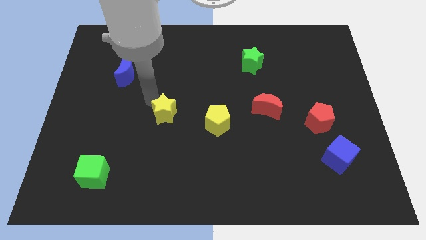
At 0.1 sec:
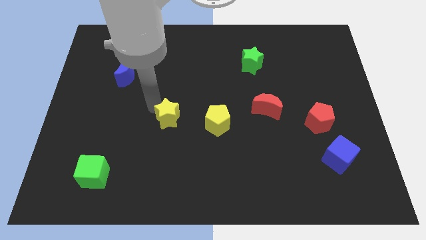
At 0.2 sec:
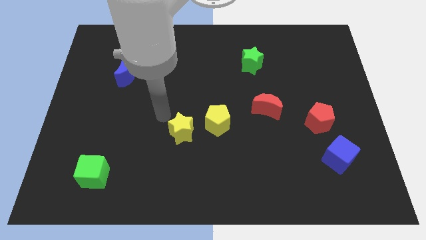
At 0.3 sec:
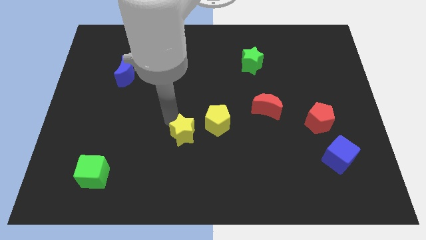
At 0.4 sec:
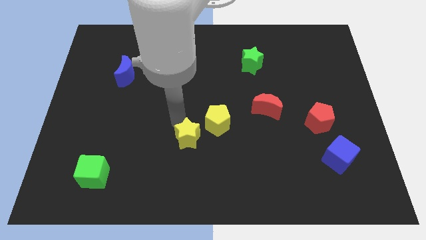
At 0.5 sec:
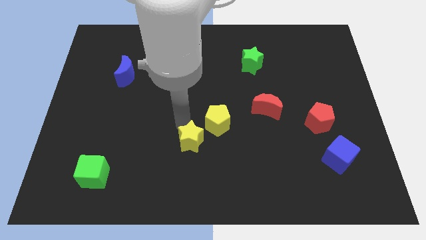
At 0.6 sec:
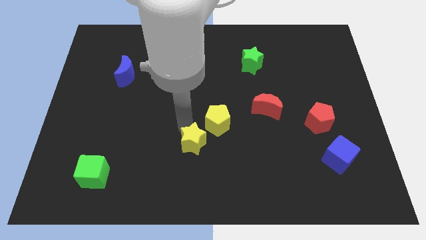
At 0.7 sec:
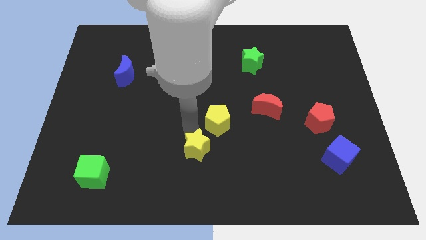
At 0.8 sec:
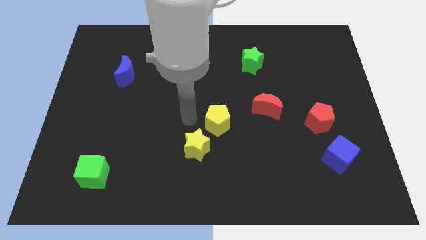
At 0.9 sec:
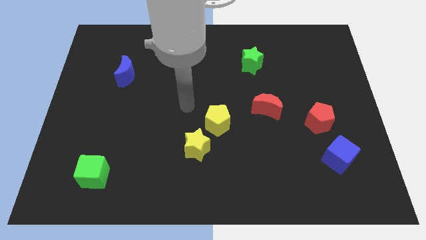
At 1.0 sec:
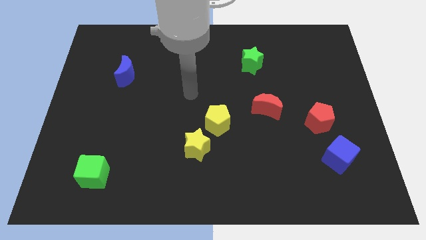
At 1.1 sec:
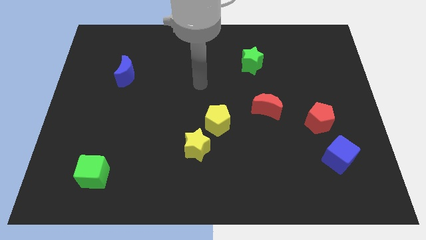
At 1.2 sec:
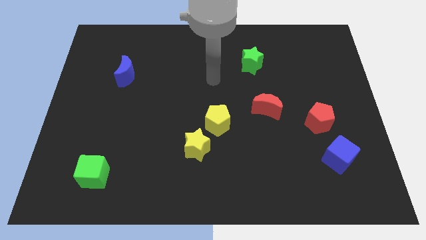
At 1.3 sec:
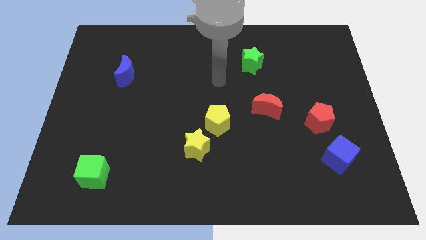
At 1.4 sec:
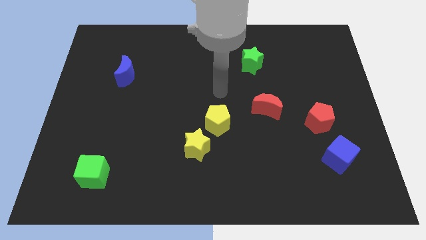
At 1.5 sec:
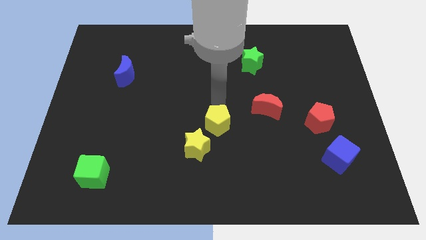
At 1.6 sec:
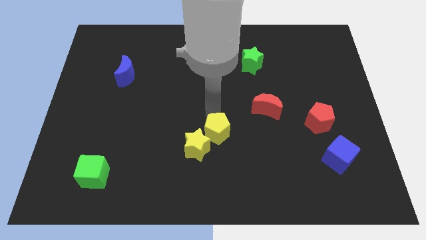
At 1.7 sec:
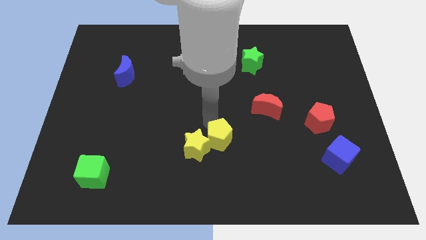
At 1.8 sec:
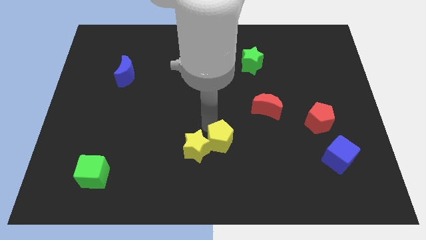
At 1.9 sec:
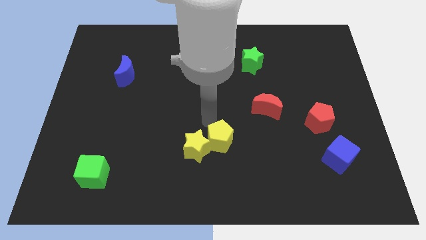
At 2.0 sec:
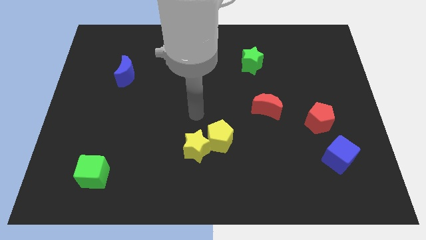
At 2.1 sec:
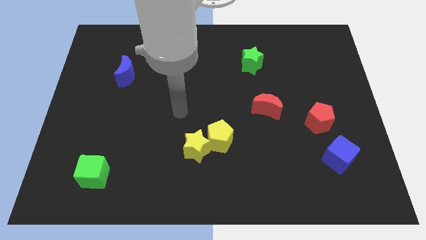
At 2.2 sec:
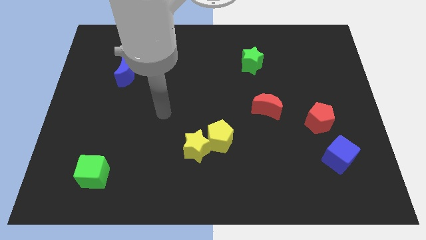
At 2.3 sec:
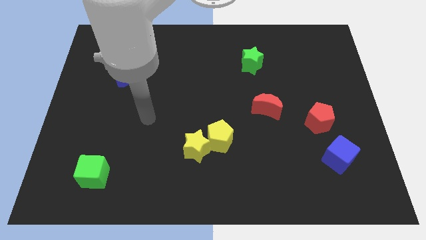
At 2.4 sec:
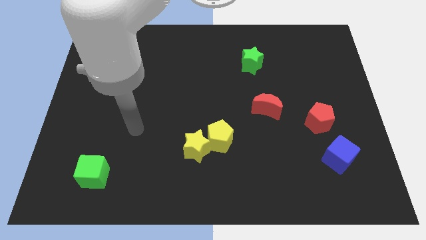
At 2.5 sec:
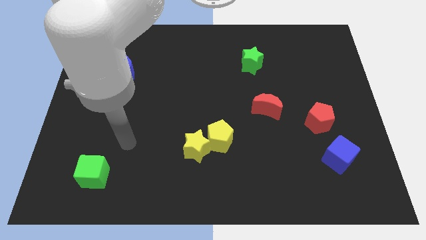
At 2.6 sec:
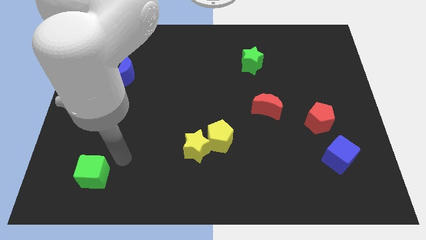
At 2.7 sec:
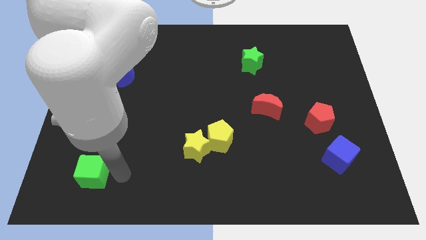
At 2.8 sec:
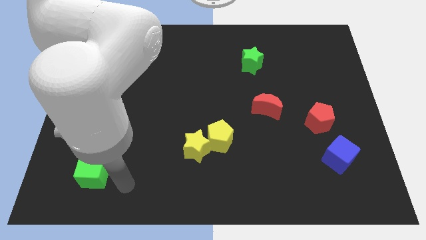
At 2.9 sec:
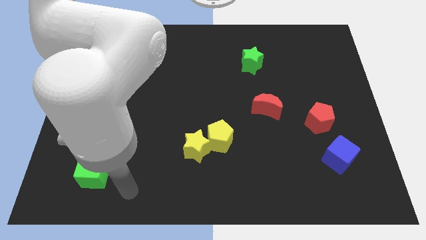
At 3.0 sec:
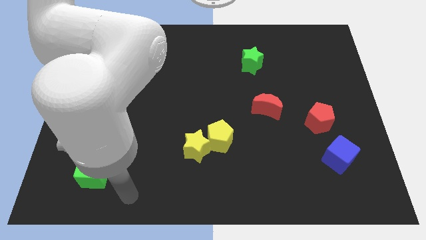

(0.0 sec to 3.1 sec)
slide yellow blocks a bit down

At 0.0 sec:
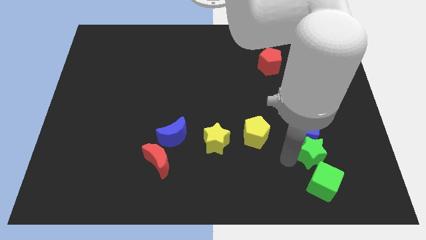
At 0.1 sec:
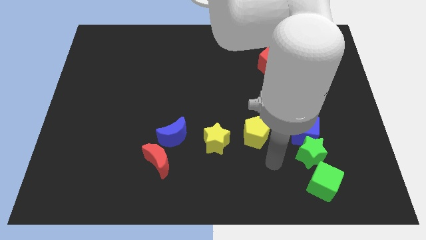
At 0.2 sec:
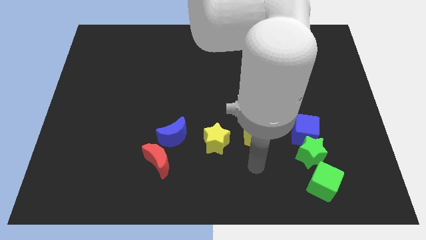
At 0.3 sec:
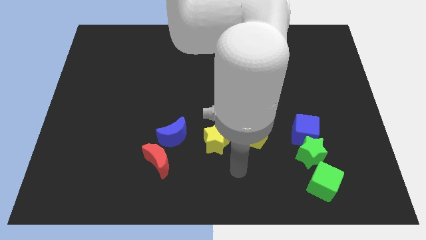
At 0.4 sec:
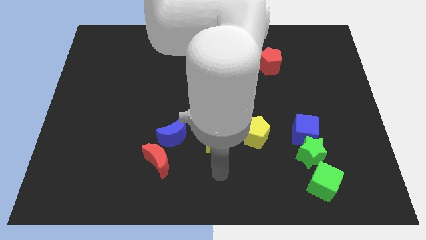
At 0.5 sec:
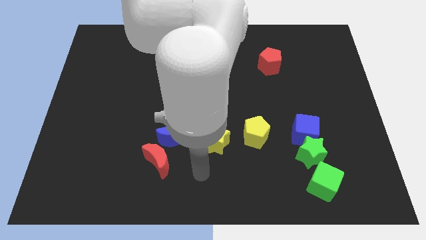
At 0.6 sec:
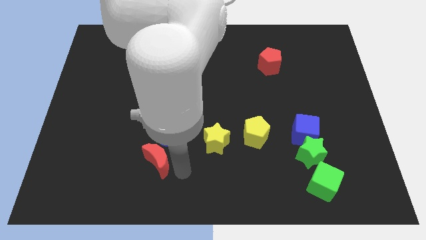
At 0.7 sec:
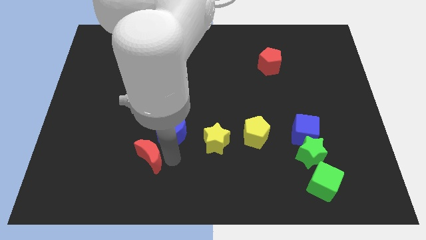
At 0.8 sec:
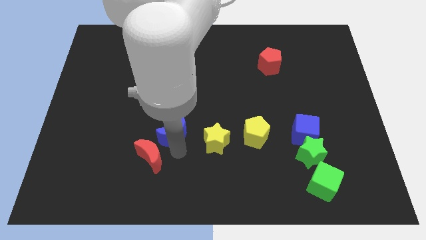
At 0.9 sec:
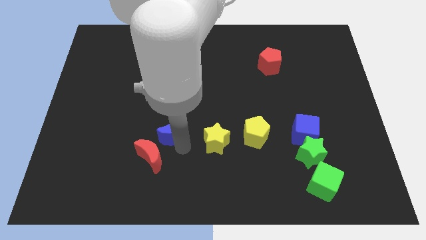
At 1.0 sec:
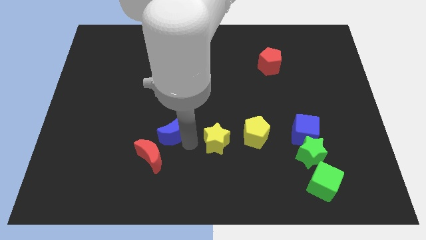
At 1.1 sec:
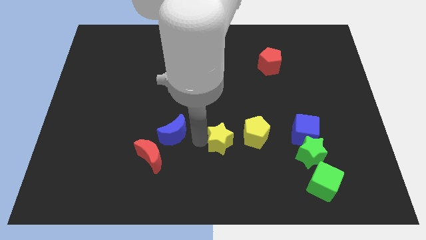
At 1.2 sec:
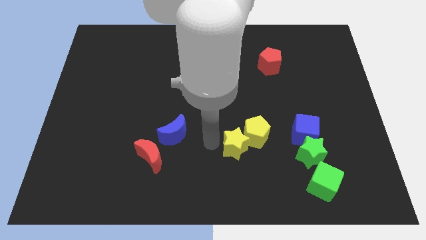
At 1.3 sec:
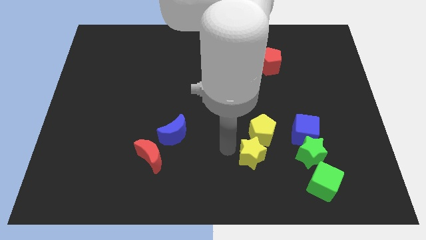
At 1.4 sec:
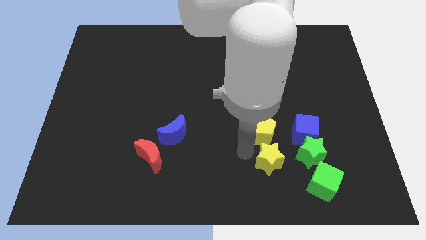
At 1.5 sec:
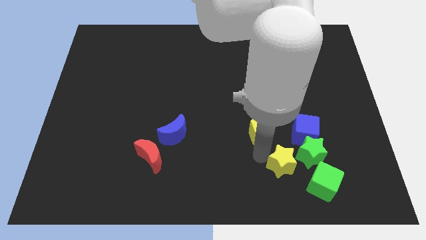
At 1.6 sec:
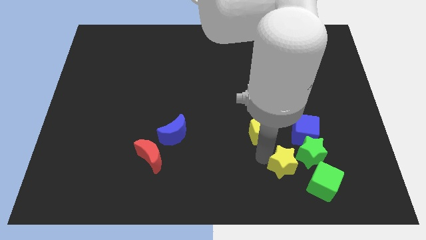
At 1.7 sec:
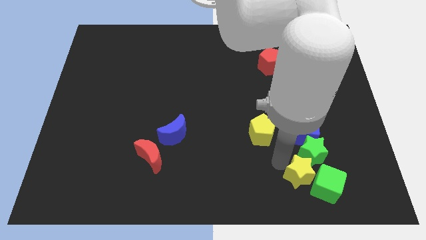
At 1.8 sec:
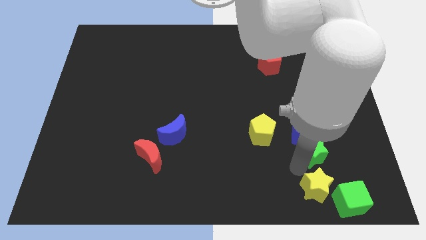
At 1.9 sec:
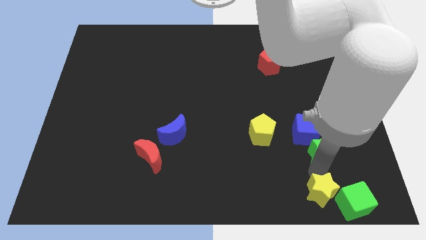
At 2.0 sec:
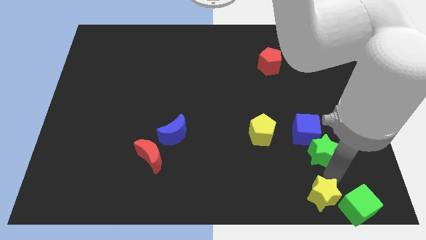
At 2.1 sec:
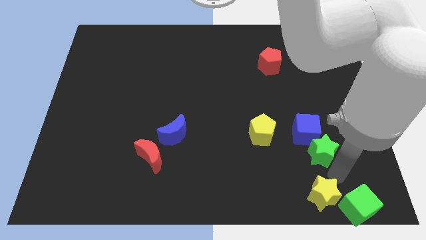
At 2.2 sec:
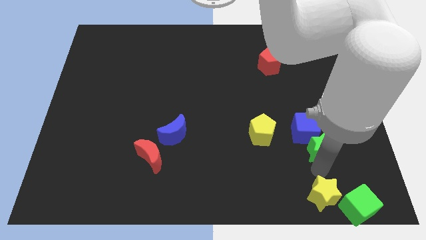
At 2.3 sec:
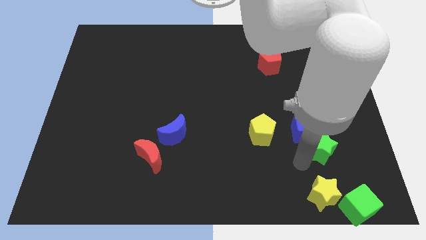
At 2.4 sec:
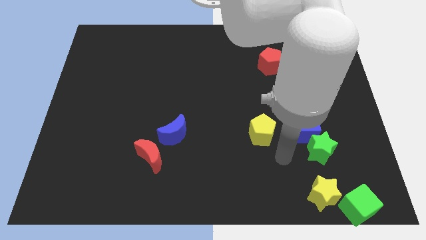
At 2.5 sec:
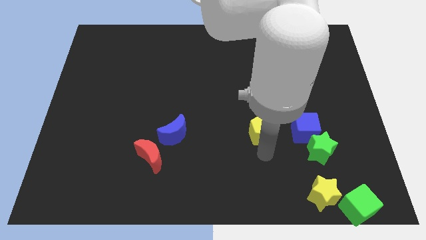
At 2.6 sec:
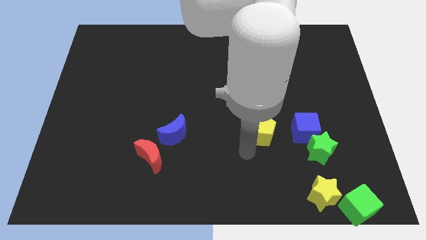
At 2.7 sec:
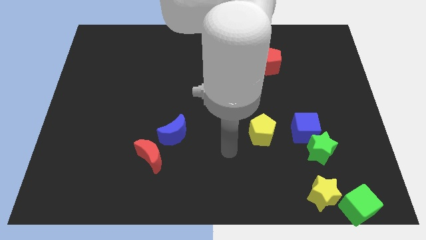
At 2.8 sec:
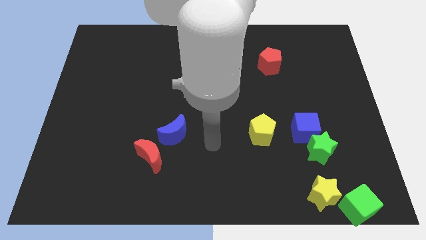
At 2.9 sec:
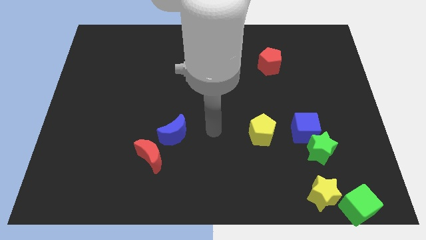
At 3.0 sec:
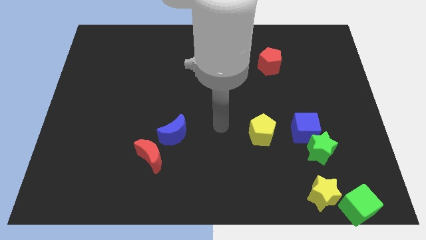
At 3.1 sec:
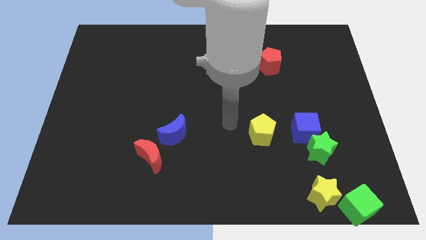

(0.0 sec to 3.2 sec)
push the yellow star vertically below the green star

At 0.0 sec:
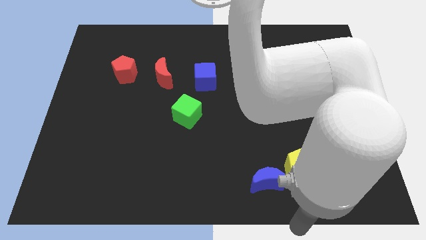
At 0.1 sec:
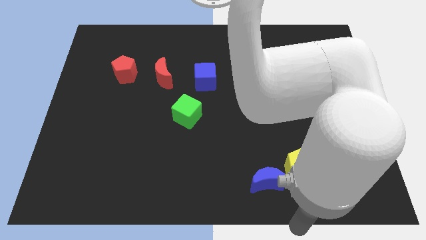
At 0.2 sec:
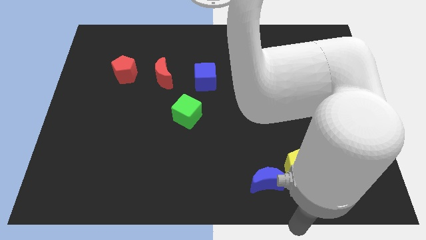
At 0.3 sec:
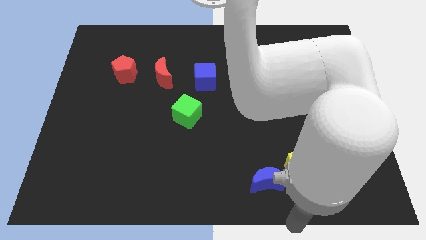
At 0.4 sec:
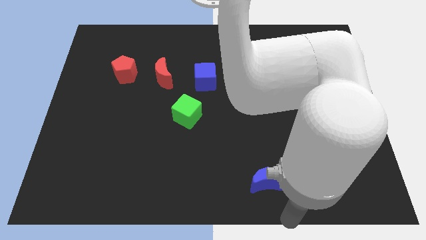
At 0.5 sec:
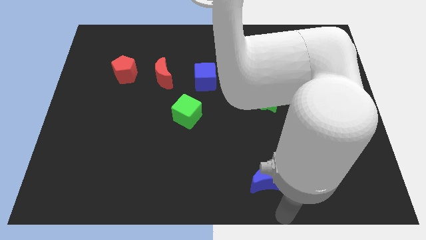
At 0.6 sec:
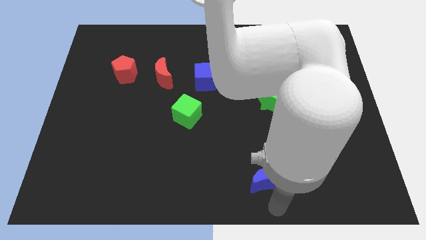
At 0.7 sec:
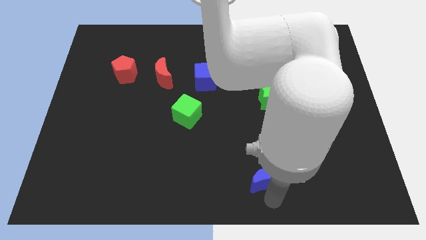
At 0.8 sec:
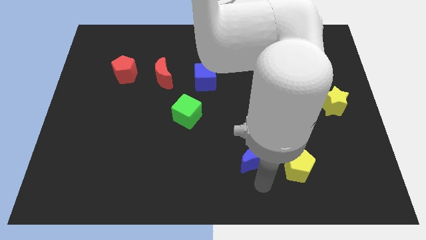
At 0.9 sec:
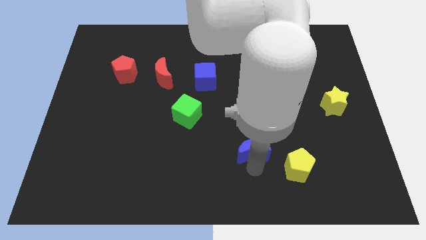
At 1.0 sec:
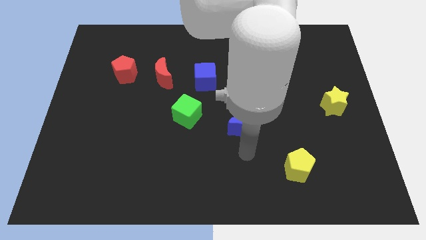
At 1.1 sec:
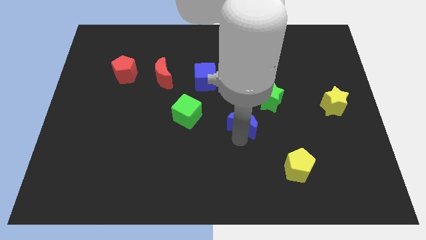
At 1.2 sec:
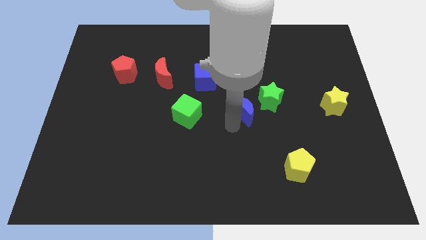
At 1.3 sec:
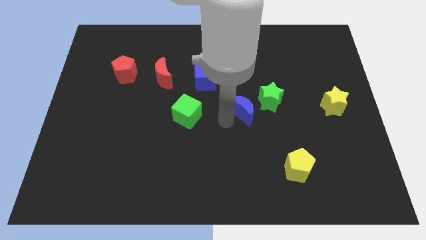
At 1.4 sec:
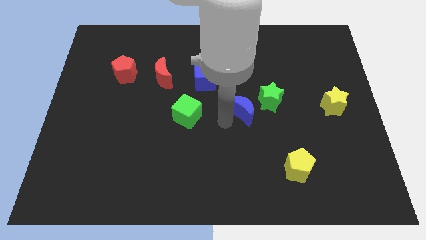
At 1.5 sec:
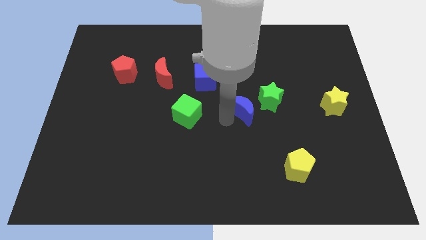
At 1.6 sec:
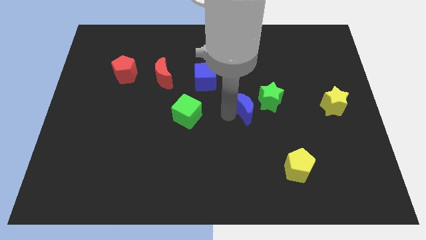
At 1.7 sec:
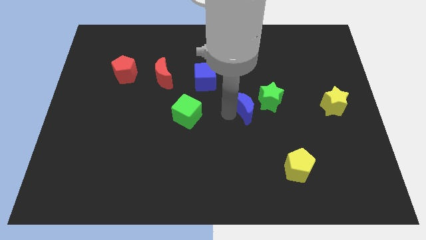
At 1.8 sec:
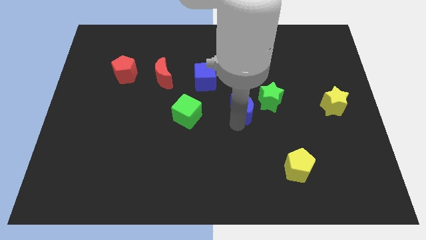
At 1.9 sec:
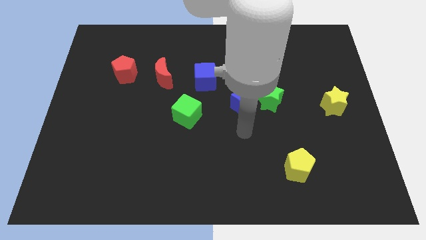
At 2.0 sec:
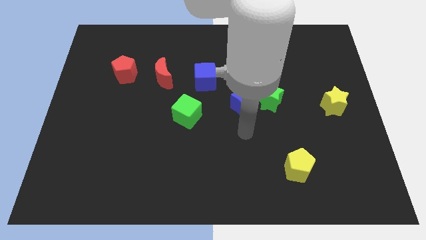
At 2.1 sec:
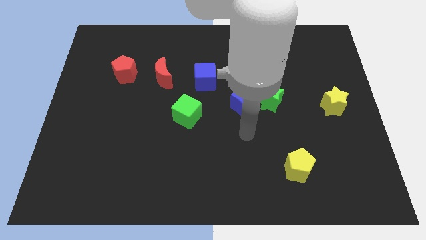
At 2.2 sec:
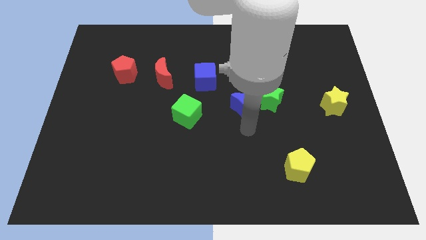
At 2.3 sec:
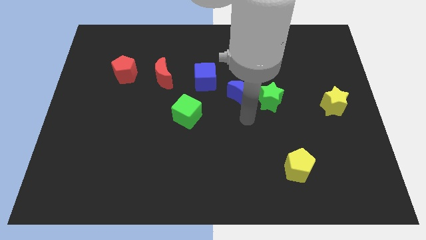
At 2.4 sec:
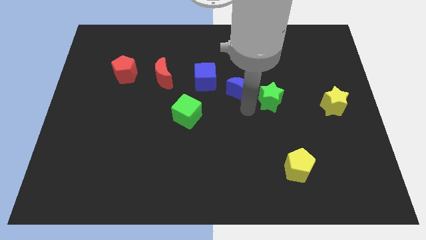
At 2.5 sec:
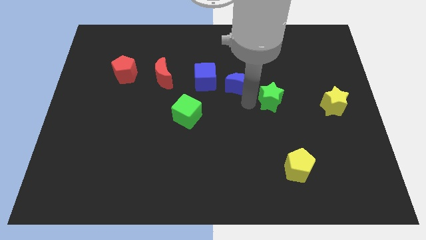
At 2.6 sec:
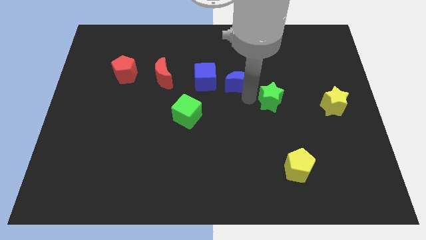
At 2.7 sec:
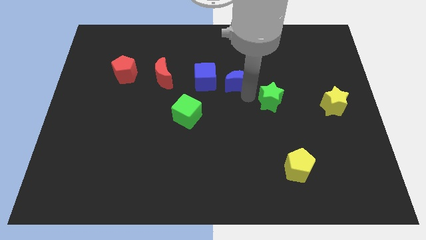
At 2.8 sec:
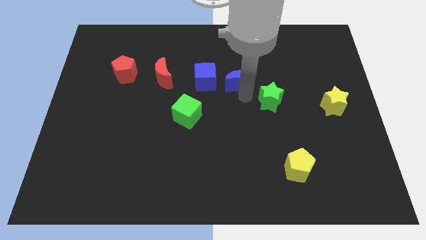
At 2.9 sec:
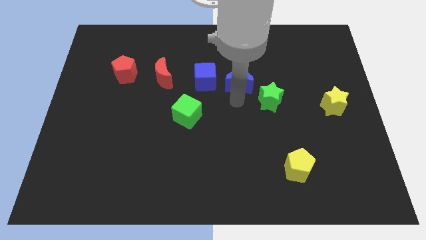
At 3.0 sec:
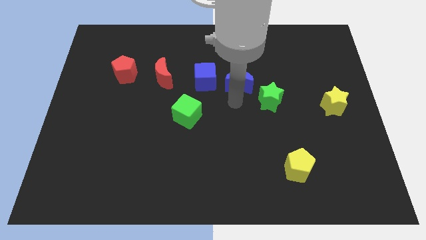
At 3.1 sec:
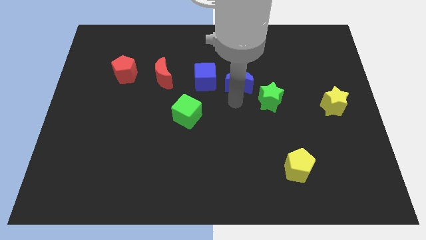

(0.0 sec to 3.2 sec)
separate the blue moon from the yellow pentagon
